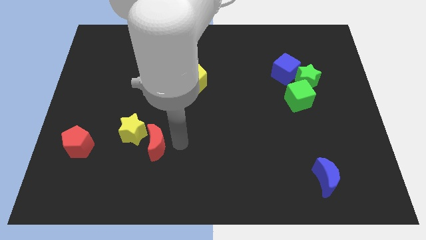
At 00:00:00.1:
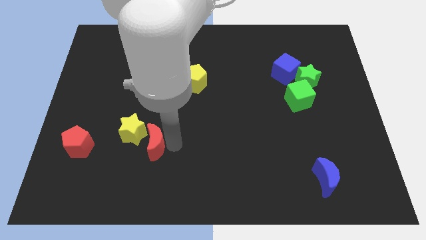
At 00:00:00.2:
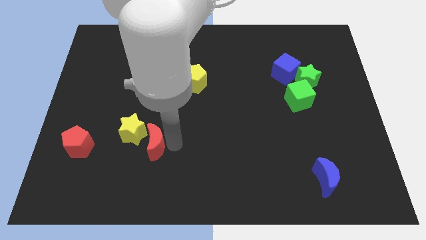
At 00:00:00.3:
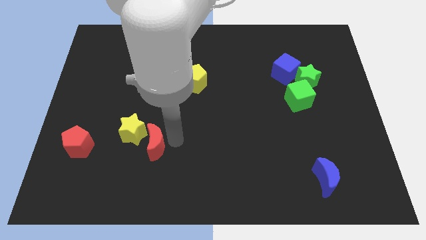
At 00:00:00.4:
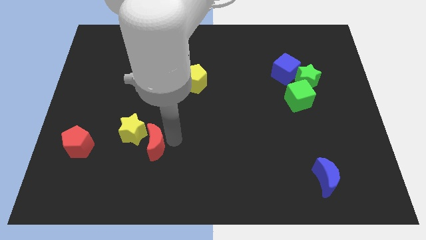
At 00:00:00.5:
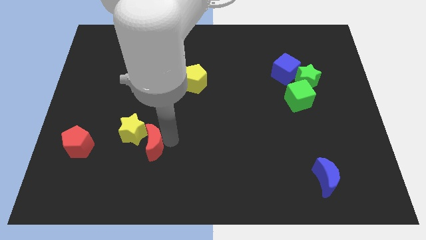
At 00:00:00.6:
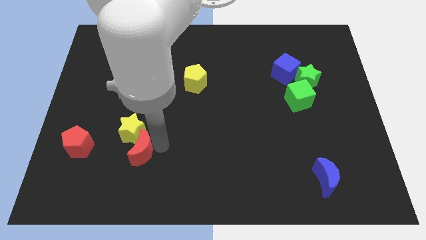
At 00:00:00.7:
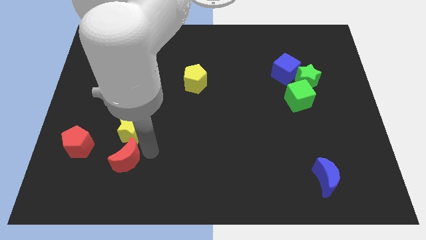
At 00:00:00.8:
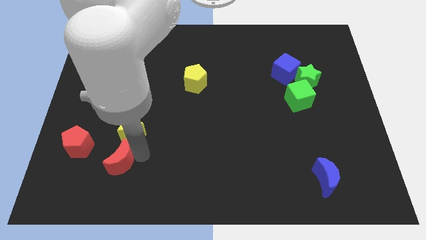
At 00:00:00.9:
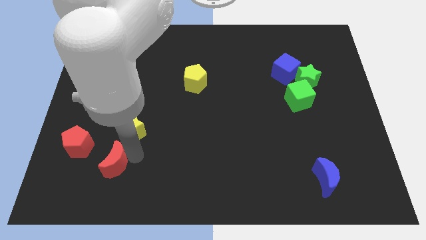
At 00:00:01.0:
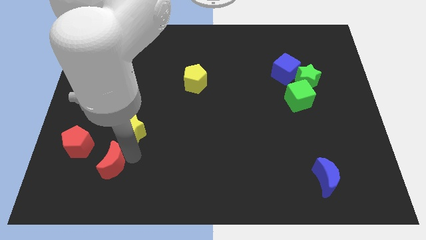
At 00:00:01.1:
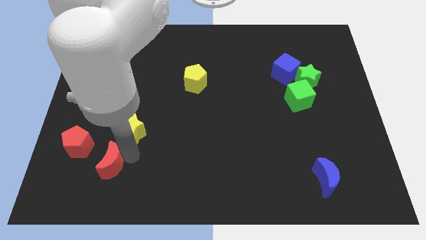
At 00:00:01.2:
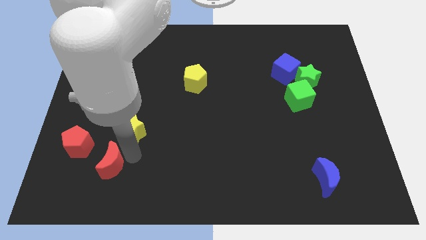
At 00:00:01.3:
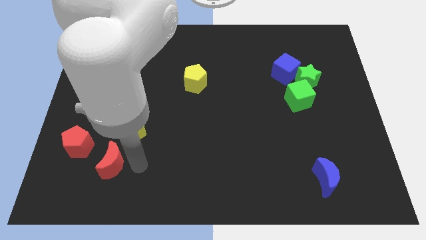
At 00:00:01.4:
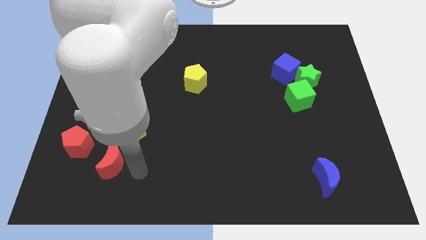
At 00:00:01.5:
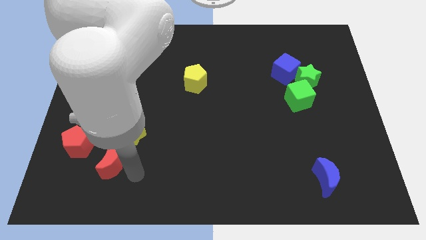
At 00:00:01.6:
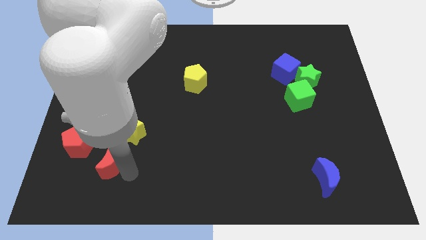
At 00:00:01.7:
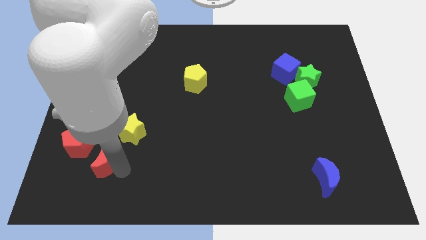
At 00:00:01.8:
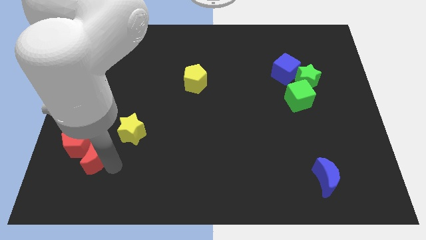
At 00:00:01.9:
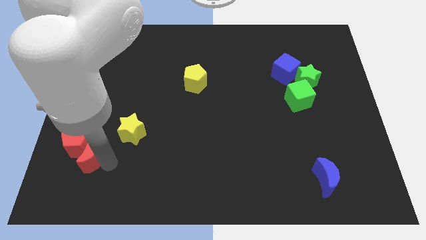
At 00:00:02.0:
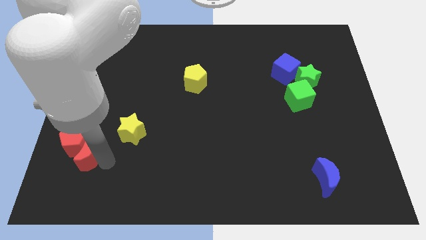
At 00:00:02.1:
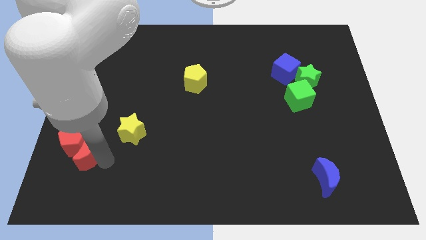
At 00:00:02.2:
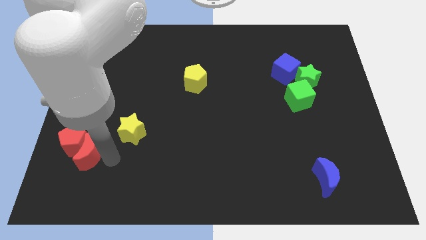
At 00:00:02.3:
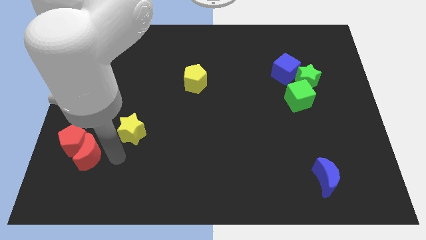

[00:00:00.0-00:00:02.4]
move the red crescent diagonally below the red pentagon

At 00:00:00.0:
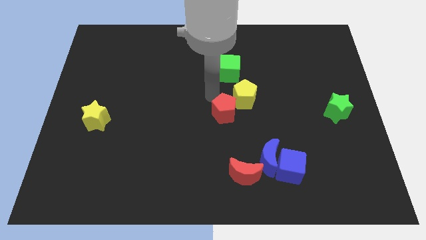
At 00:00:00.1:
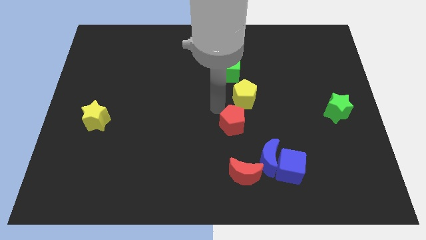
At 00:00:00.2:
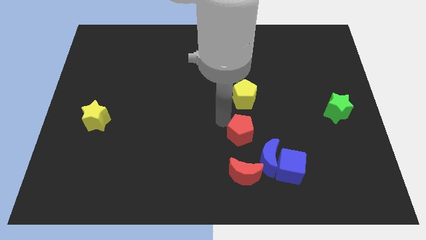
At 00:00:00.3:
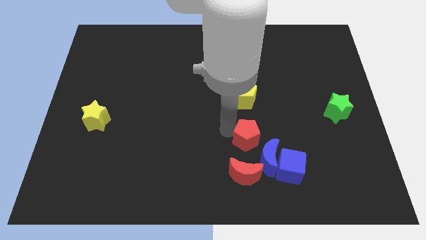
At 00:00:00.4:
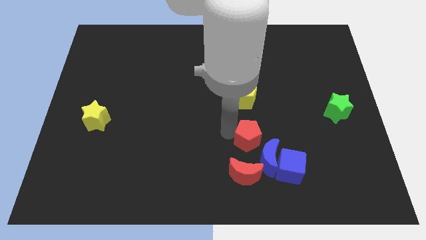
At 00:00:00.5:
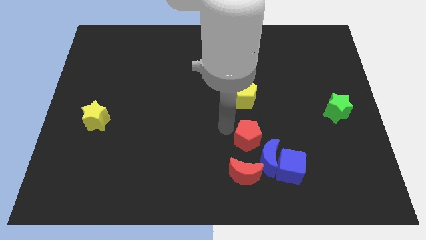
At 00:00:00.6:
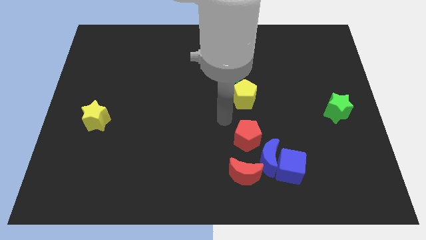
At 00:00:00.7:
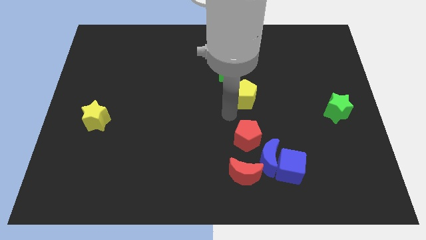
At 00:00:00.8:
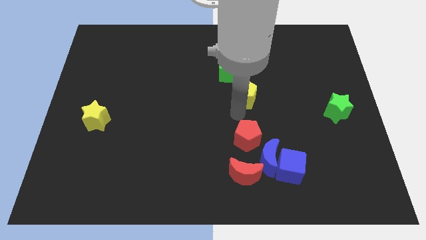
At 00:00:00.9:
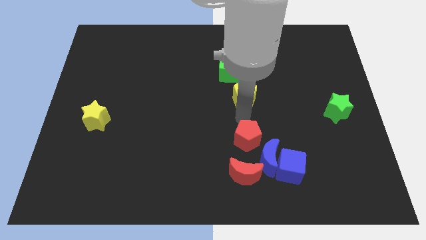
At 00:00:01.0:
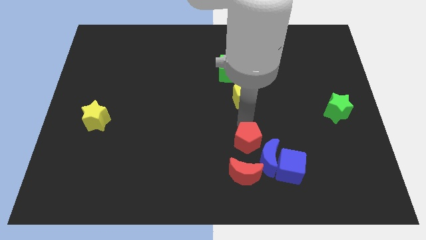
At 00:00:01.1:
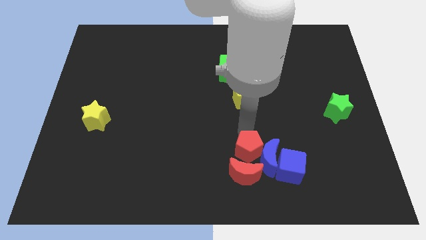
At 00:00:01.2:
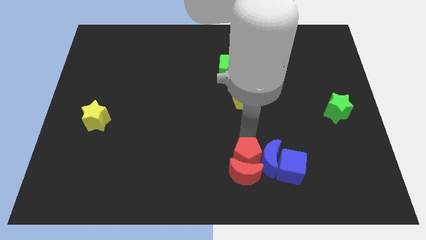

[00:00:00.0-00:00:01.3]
push the red pentagon to the left of the blue crescent

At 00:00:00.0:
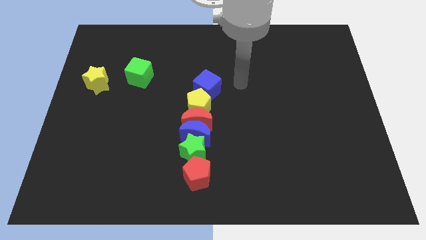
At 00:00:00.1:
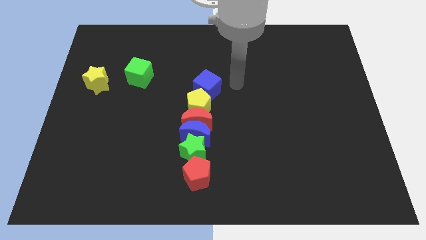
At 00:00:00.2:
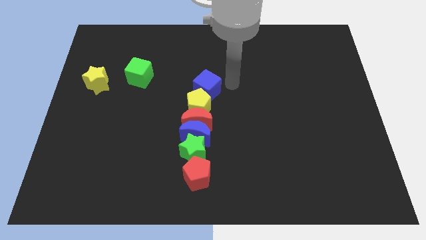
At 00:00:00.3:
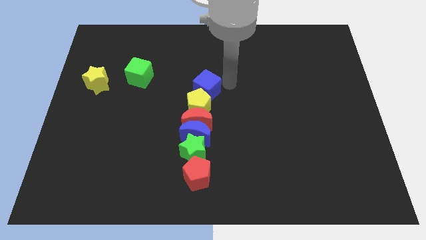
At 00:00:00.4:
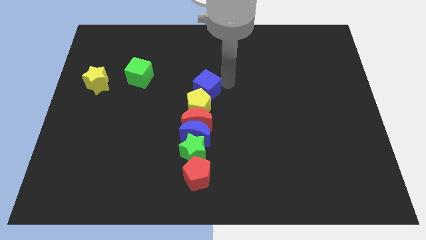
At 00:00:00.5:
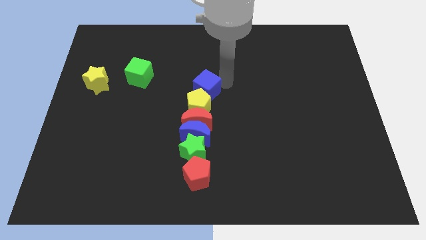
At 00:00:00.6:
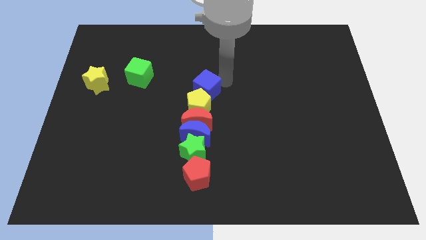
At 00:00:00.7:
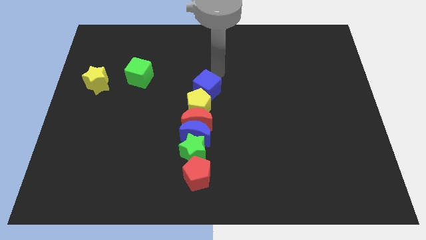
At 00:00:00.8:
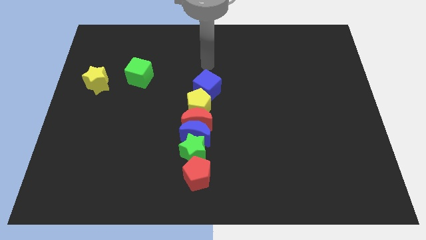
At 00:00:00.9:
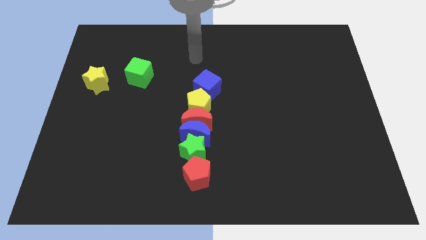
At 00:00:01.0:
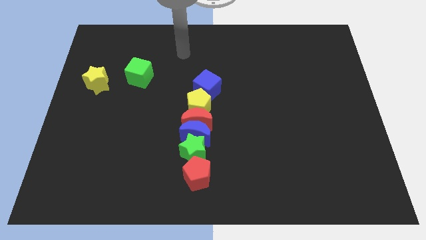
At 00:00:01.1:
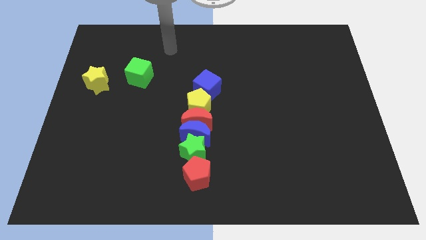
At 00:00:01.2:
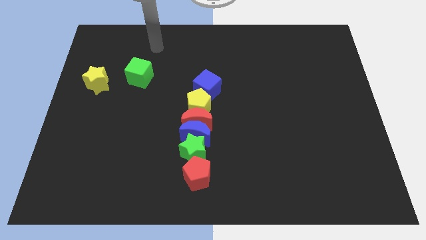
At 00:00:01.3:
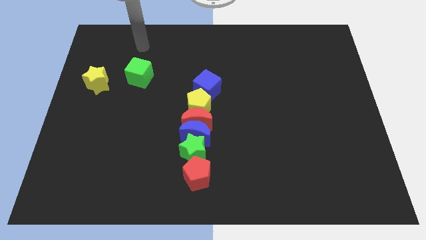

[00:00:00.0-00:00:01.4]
move the arm towards the top left center of the board

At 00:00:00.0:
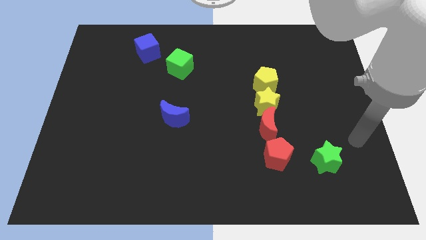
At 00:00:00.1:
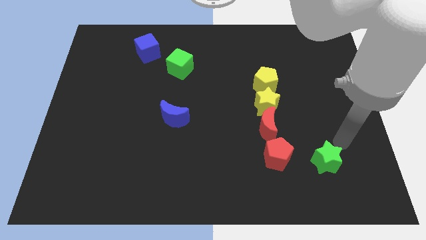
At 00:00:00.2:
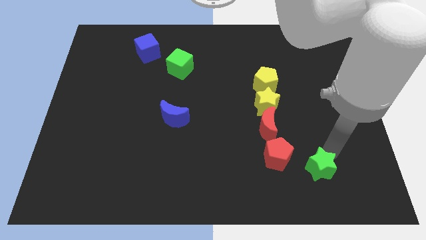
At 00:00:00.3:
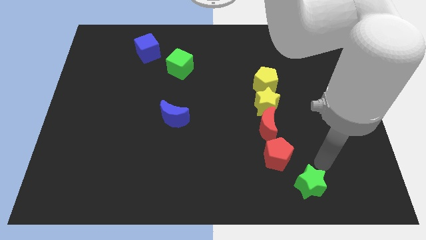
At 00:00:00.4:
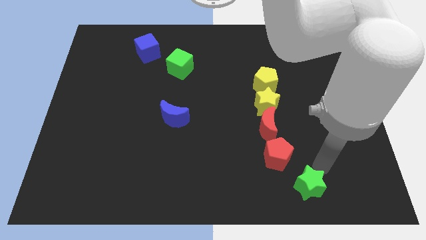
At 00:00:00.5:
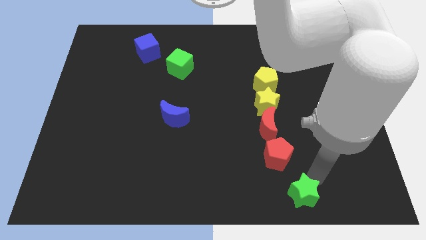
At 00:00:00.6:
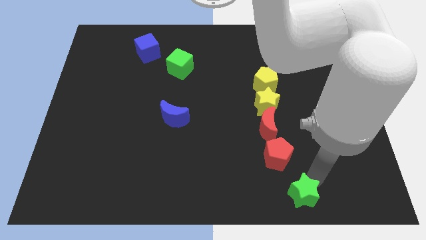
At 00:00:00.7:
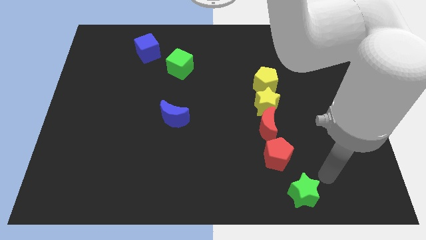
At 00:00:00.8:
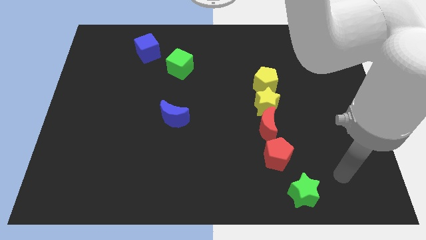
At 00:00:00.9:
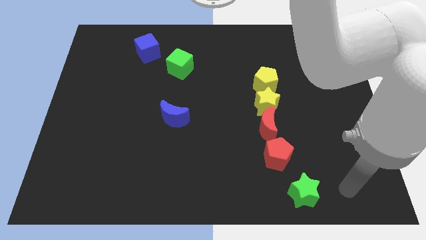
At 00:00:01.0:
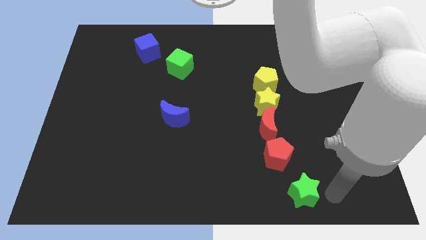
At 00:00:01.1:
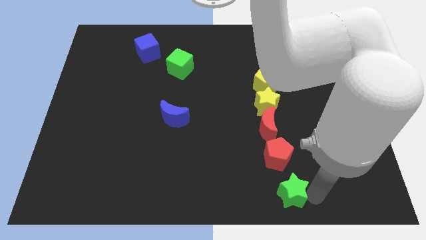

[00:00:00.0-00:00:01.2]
move the green star diagonally bottom right to red pentagon

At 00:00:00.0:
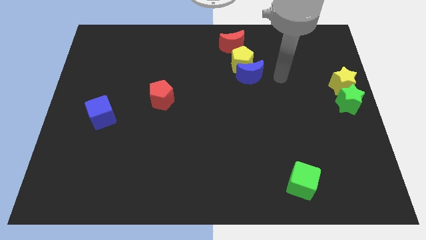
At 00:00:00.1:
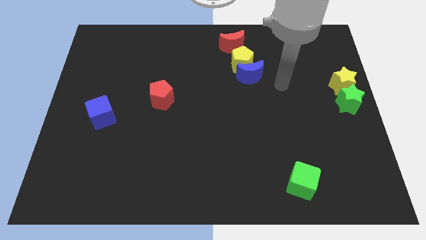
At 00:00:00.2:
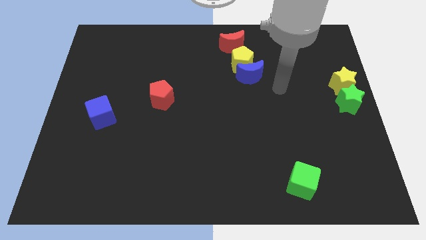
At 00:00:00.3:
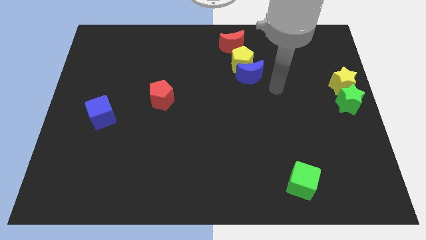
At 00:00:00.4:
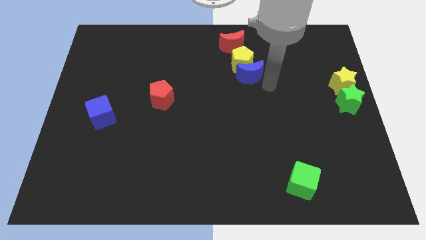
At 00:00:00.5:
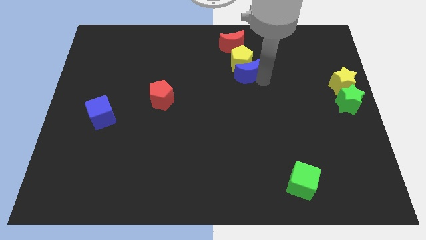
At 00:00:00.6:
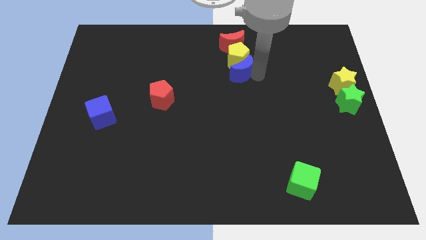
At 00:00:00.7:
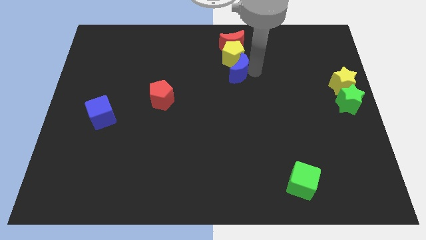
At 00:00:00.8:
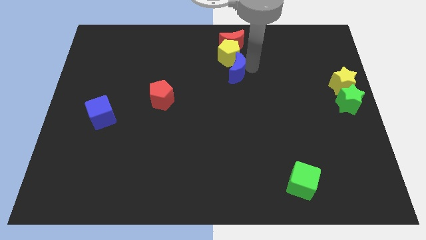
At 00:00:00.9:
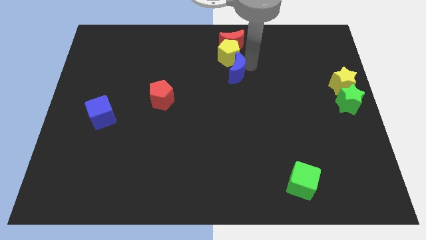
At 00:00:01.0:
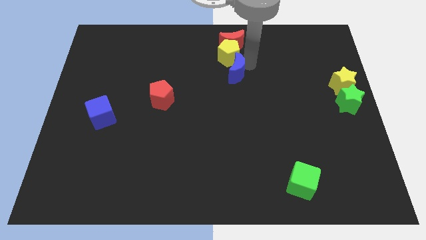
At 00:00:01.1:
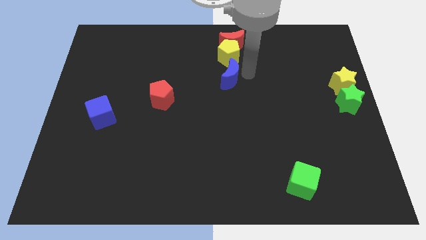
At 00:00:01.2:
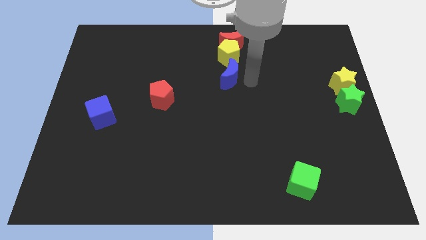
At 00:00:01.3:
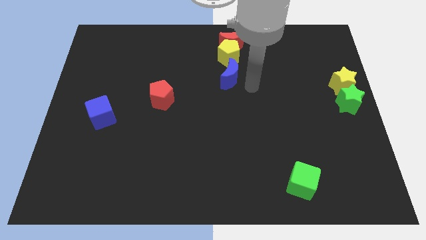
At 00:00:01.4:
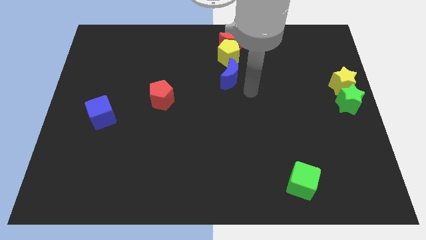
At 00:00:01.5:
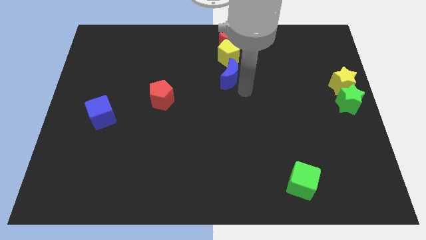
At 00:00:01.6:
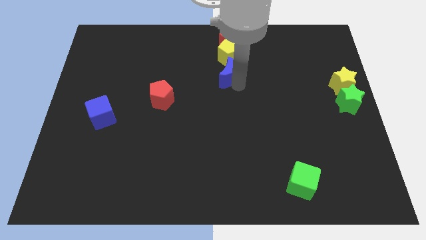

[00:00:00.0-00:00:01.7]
push the blue moon and yellow pentagon vertically below the red crescent

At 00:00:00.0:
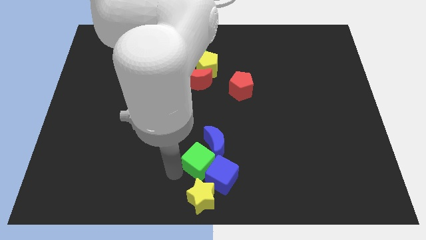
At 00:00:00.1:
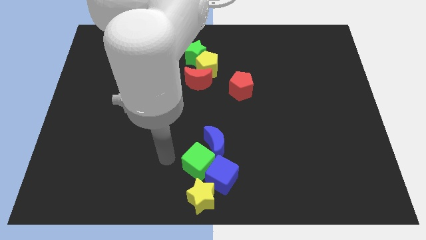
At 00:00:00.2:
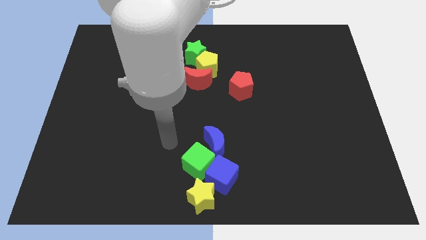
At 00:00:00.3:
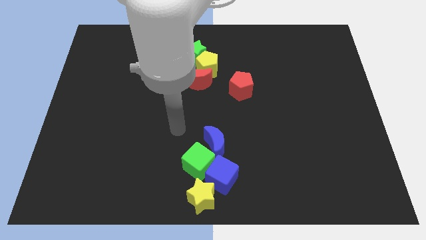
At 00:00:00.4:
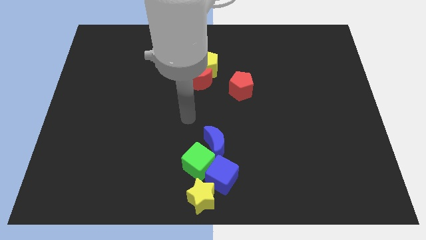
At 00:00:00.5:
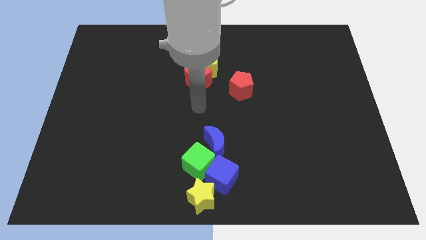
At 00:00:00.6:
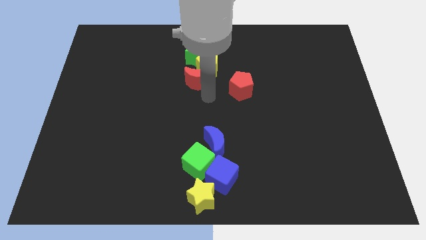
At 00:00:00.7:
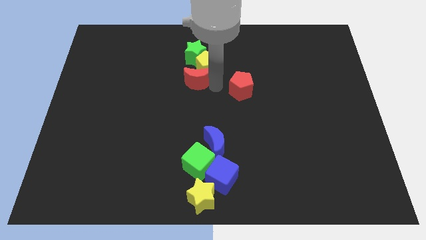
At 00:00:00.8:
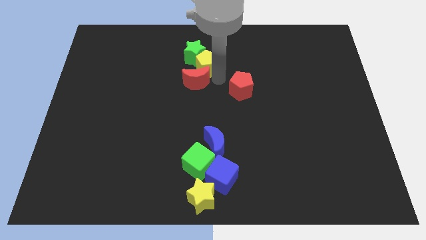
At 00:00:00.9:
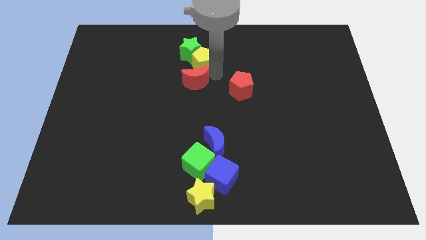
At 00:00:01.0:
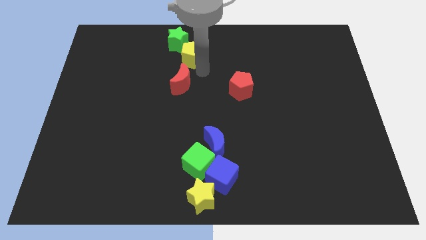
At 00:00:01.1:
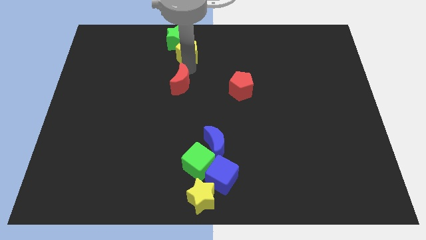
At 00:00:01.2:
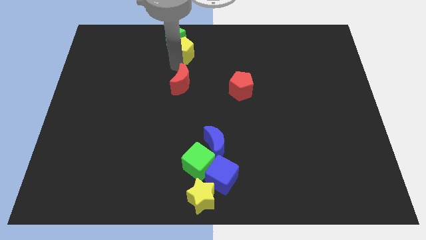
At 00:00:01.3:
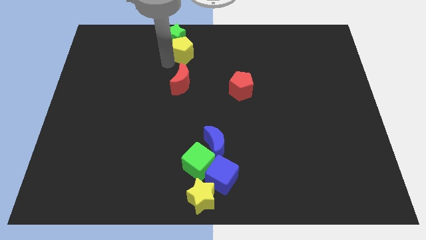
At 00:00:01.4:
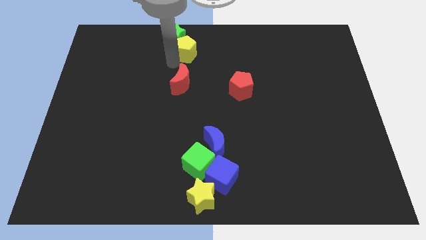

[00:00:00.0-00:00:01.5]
place the yellow pentagon and green star above the red crescent
